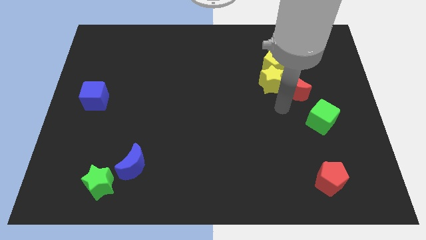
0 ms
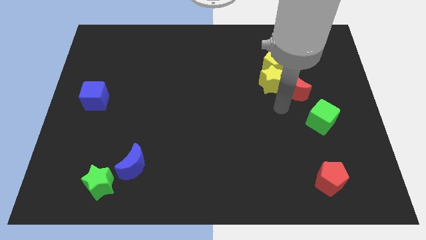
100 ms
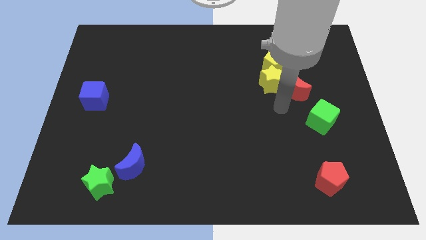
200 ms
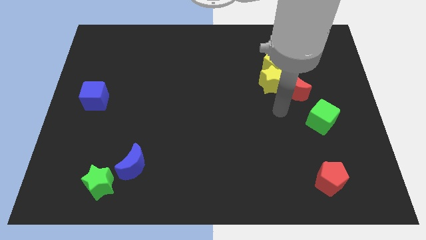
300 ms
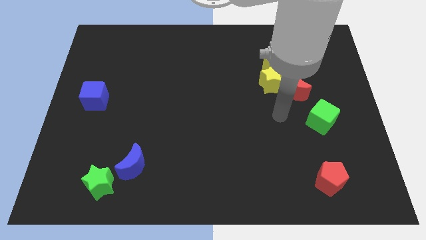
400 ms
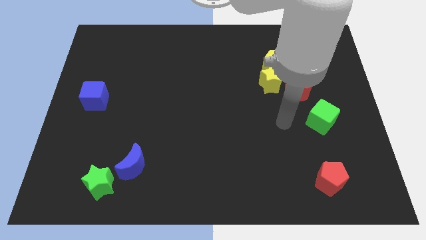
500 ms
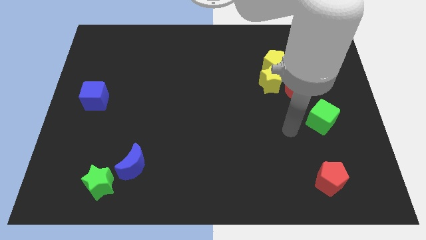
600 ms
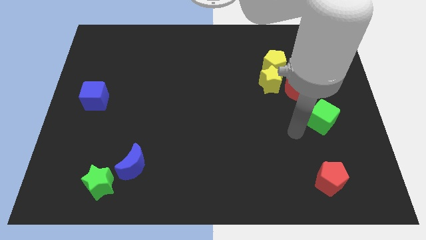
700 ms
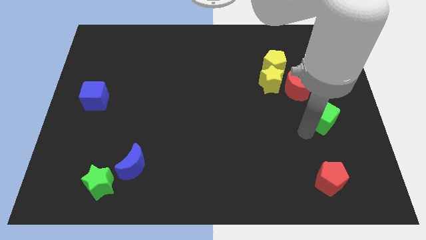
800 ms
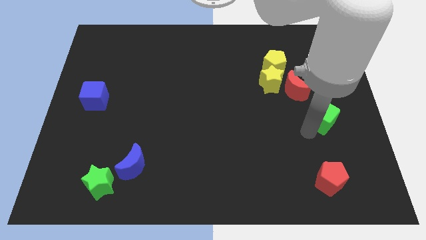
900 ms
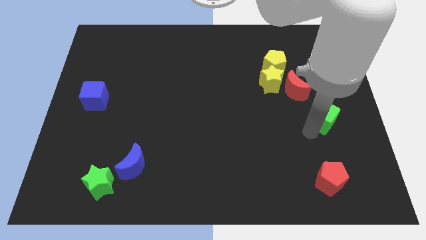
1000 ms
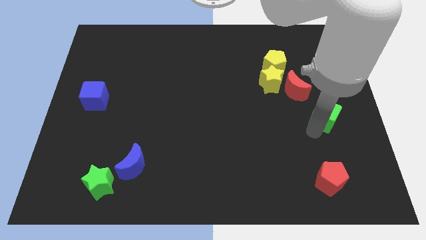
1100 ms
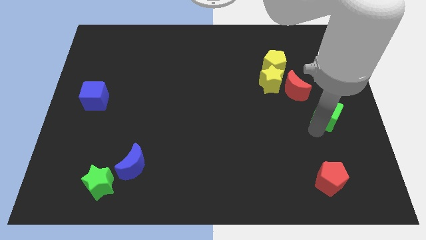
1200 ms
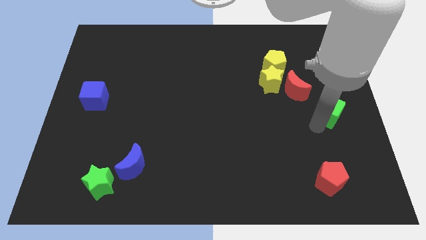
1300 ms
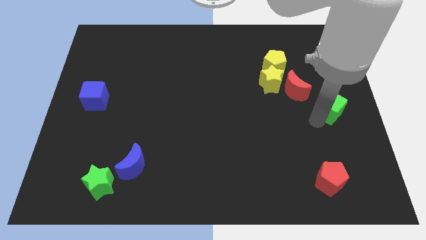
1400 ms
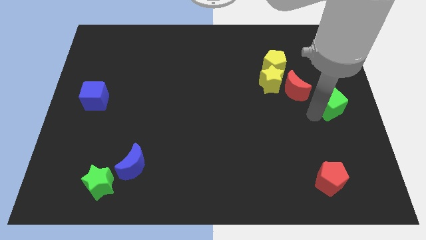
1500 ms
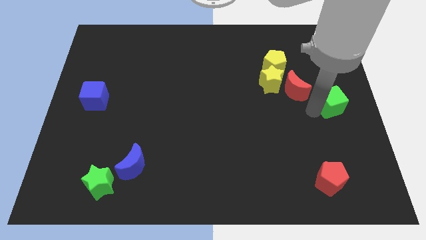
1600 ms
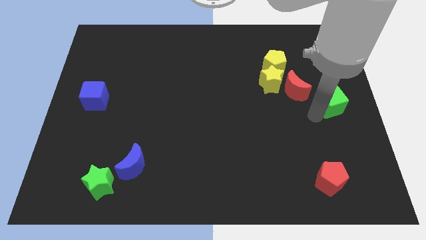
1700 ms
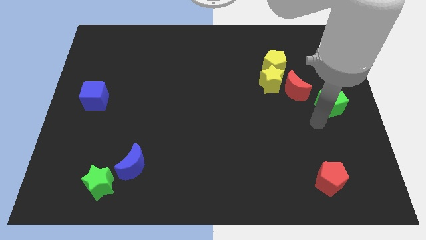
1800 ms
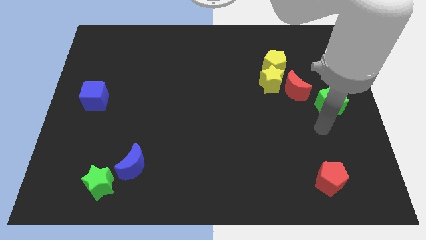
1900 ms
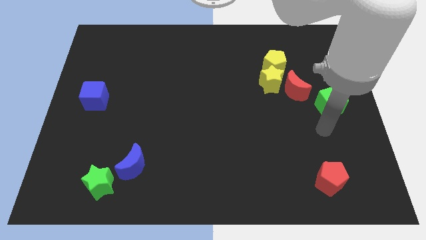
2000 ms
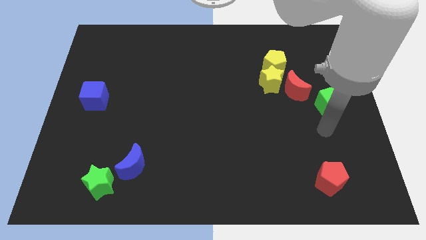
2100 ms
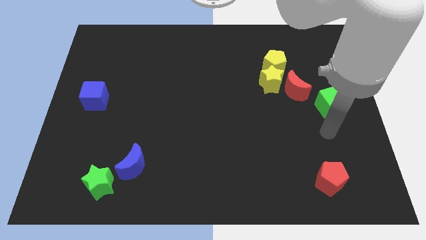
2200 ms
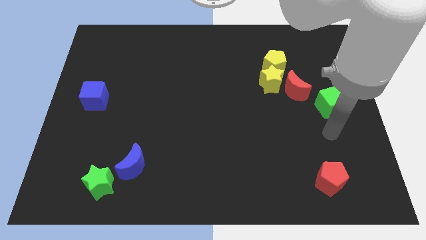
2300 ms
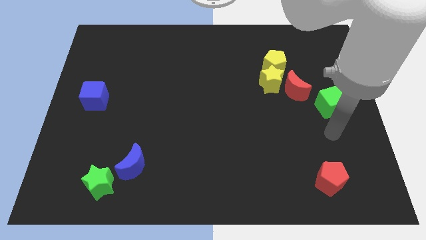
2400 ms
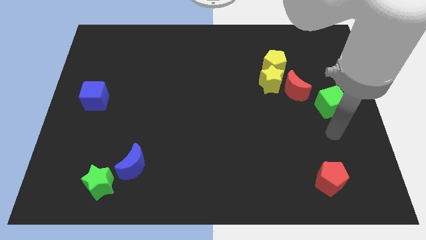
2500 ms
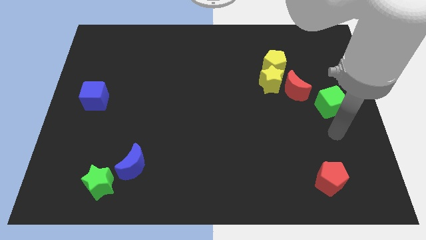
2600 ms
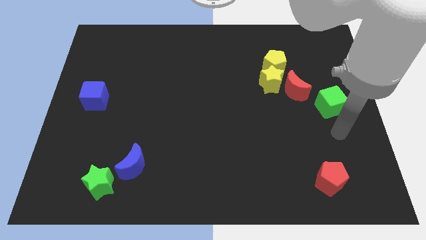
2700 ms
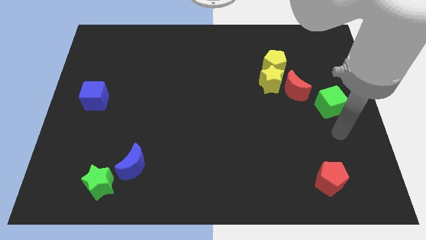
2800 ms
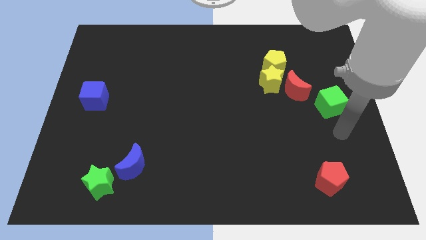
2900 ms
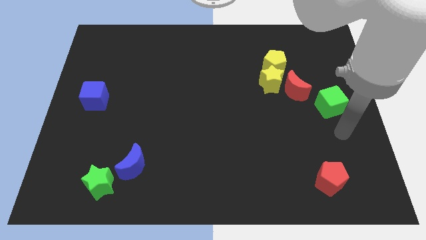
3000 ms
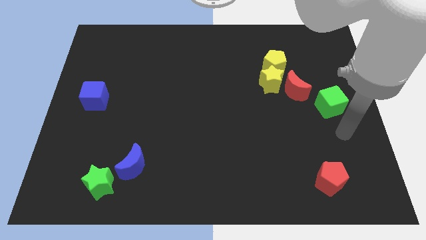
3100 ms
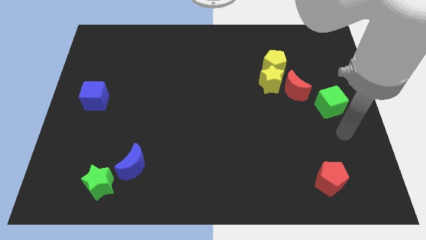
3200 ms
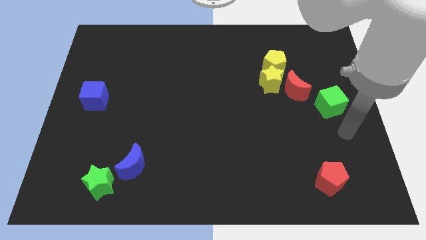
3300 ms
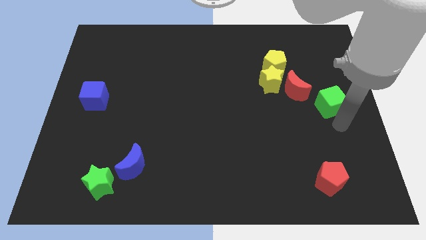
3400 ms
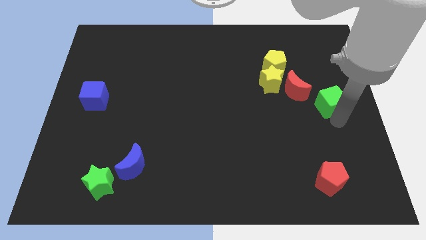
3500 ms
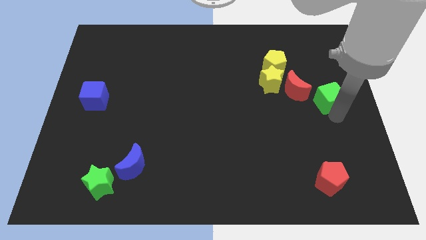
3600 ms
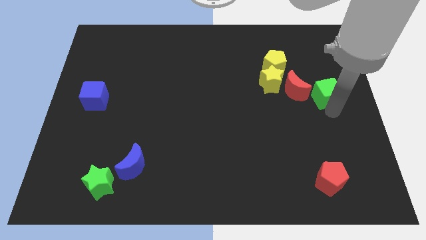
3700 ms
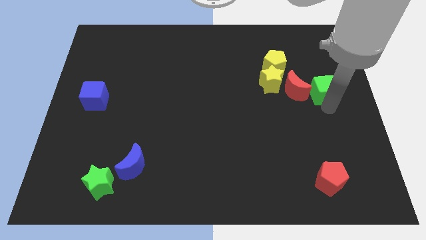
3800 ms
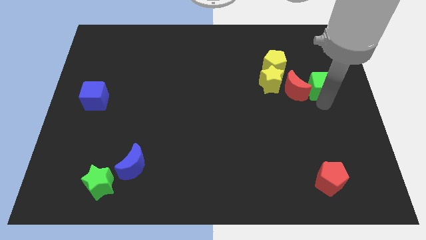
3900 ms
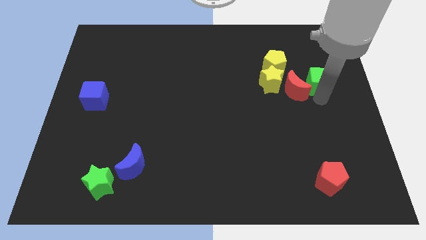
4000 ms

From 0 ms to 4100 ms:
put the green cube to the right of the red crescent

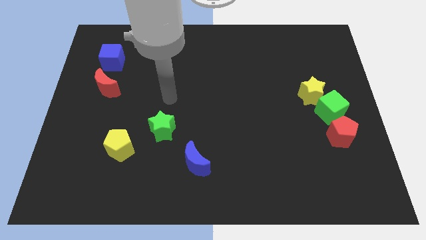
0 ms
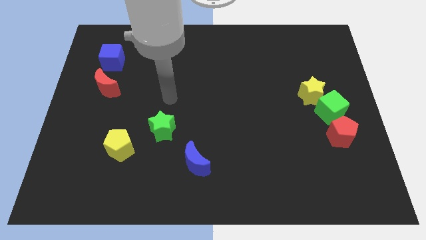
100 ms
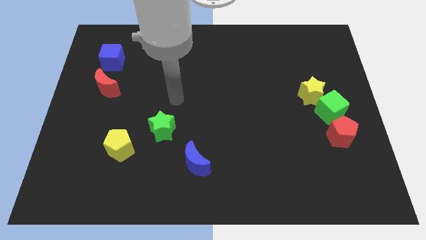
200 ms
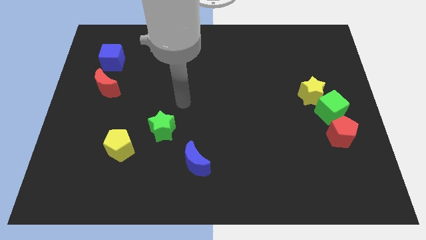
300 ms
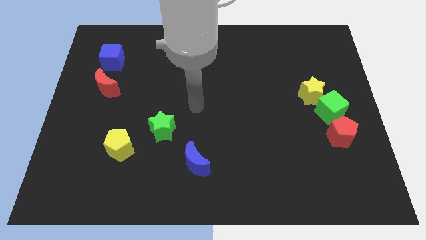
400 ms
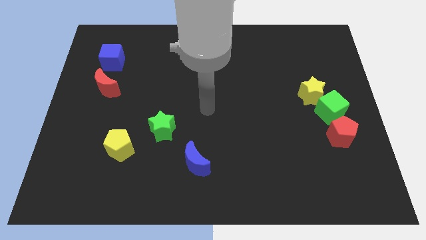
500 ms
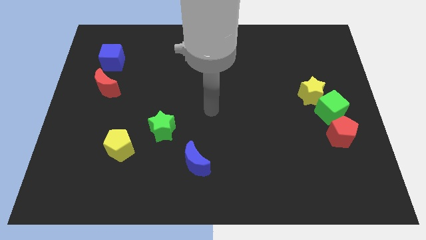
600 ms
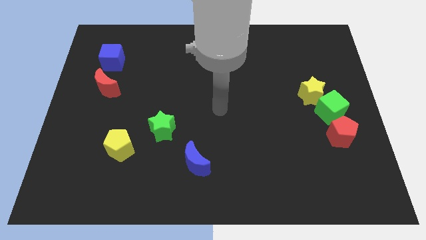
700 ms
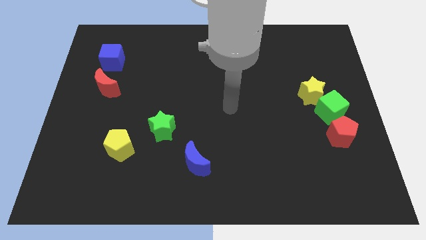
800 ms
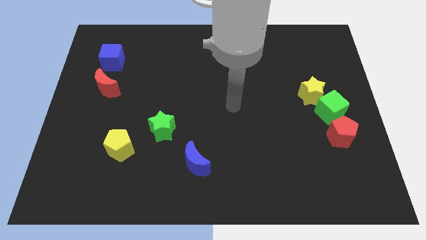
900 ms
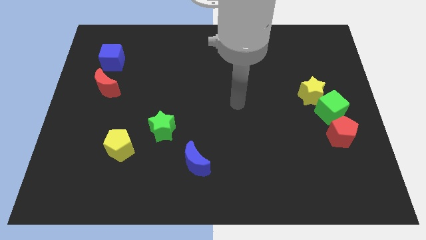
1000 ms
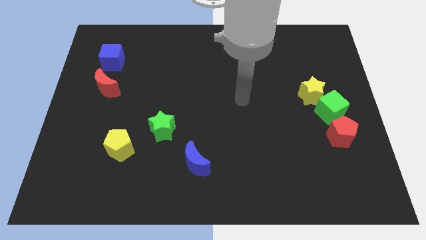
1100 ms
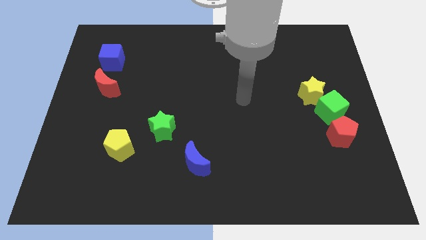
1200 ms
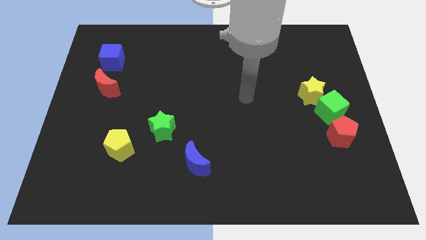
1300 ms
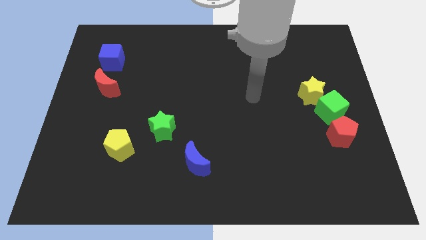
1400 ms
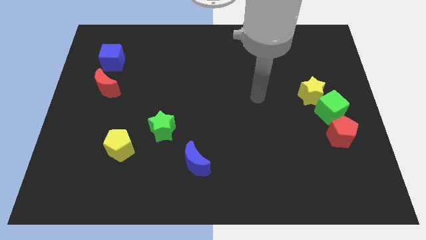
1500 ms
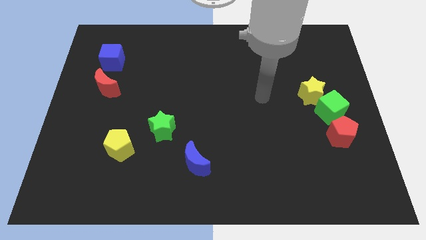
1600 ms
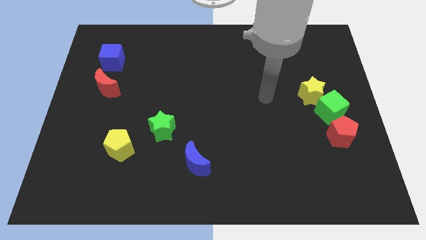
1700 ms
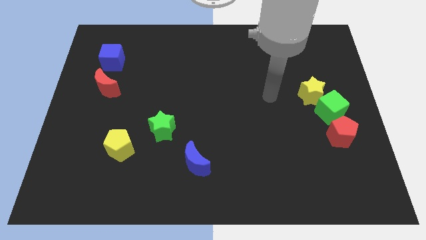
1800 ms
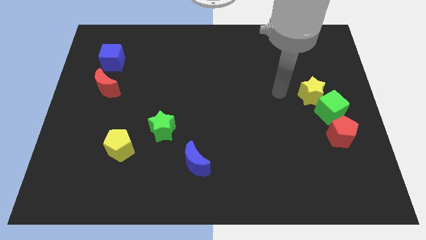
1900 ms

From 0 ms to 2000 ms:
move your arm towards the right side of the board

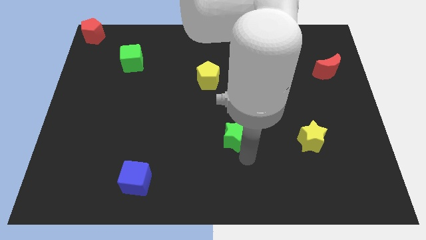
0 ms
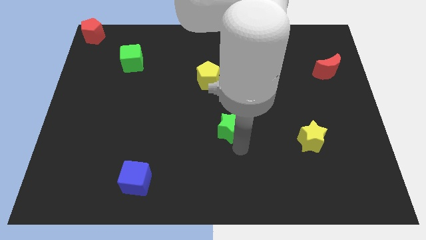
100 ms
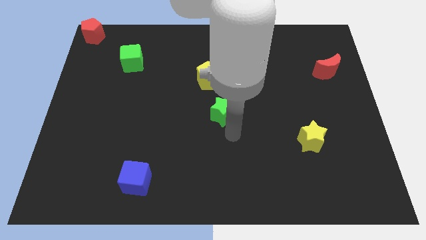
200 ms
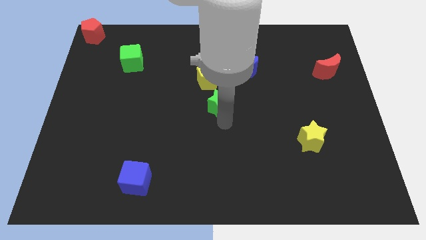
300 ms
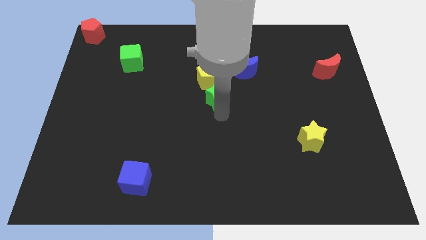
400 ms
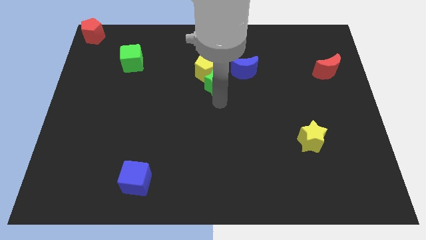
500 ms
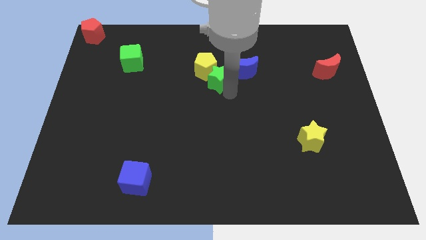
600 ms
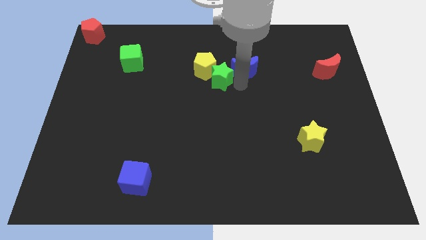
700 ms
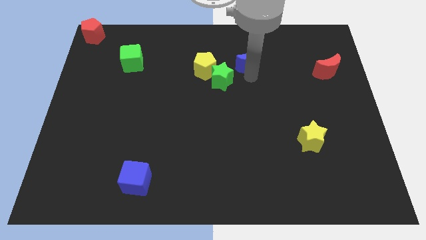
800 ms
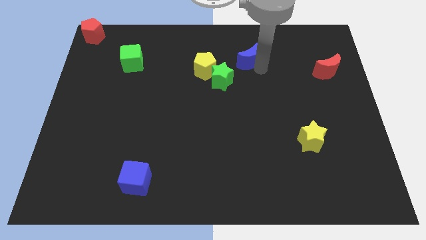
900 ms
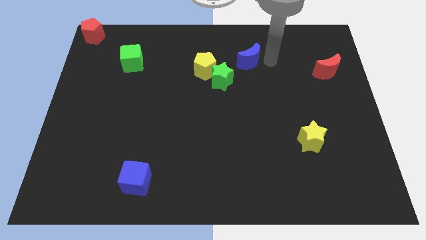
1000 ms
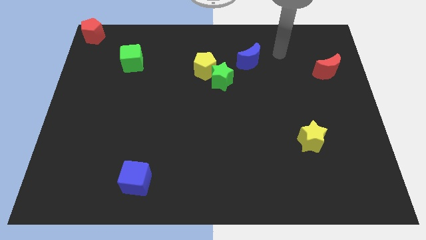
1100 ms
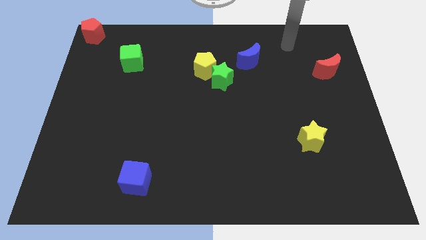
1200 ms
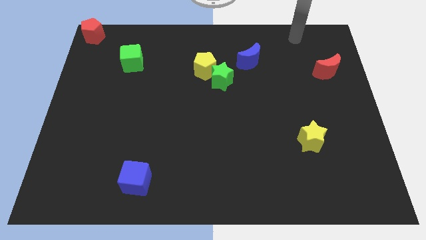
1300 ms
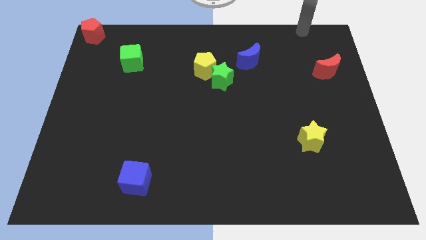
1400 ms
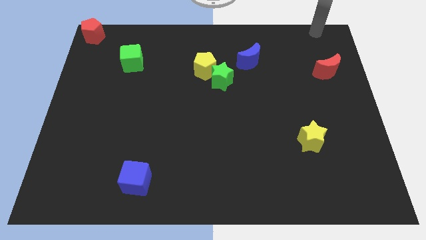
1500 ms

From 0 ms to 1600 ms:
slide the green star into the yellow pentagon

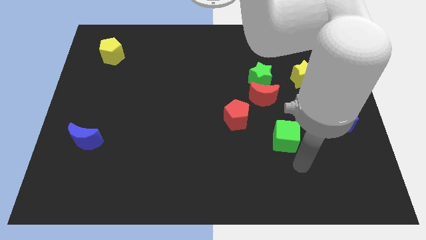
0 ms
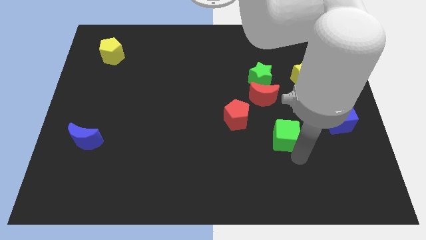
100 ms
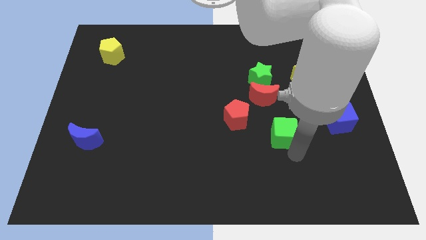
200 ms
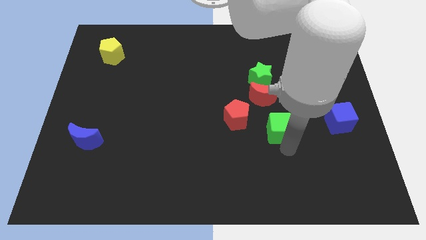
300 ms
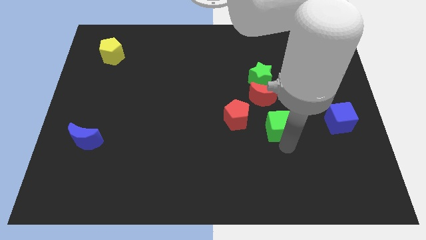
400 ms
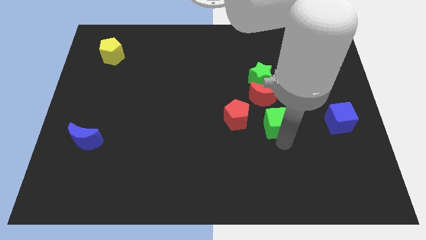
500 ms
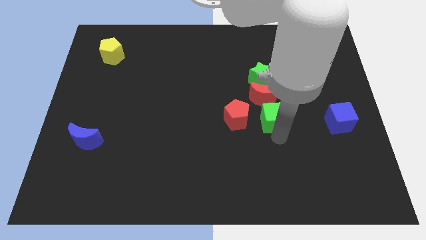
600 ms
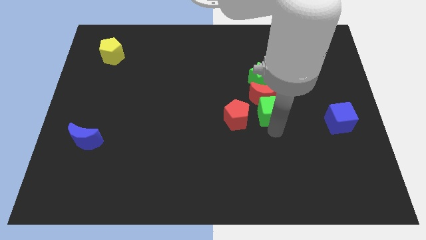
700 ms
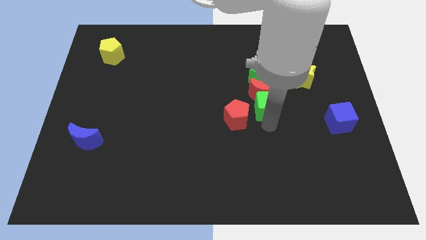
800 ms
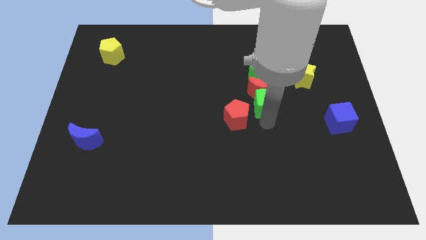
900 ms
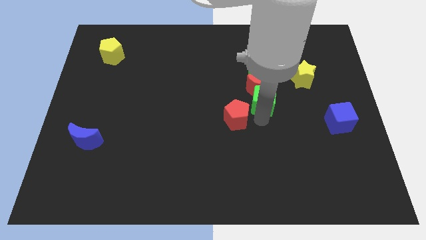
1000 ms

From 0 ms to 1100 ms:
push green cube in to red moon

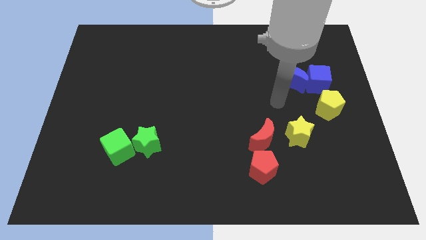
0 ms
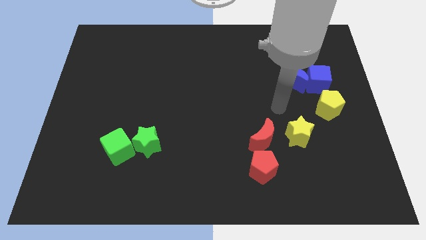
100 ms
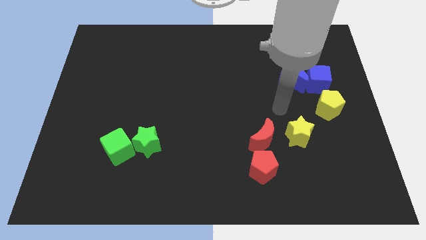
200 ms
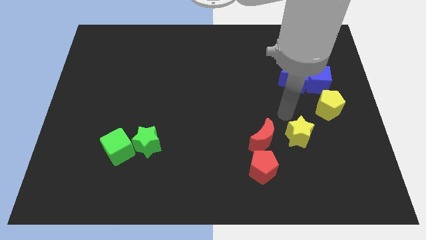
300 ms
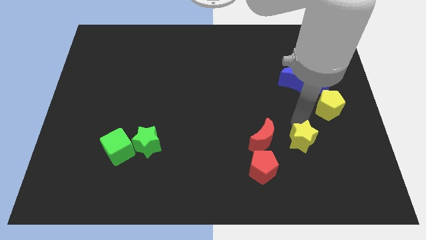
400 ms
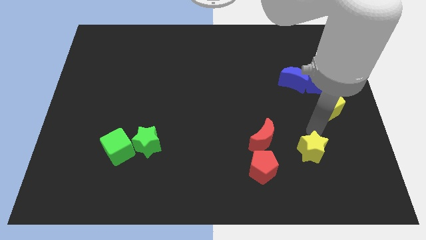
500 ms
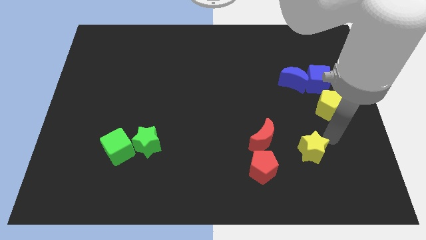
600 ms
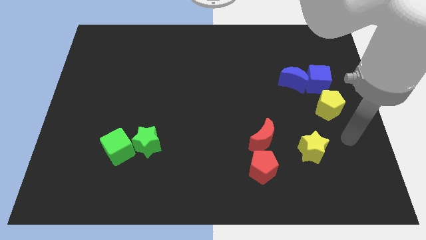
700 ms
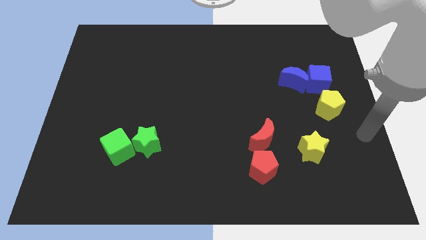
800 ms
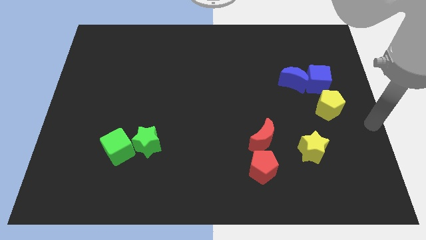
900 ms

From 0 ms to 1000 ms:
slightly push the yellow star towards bottom side
